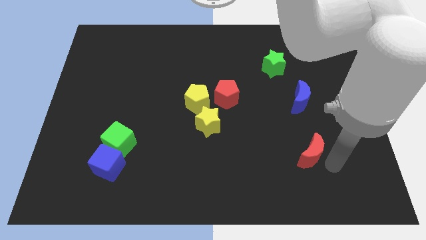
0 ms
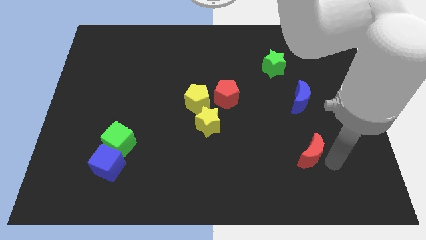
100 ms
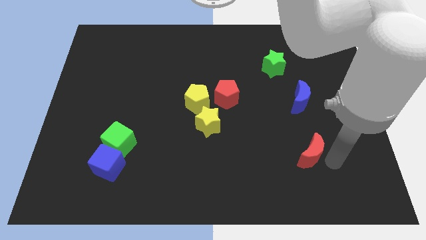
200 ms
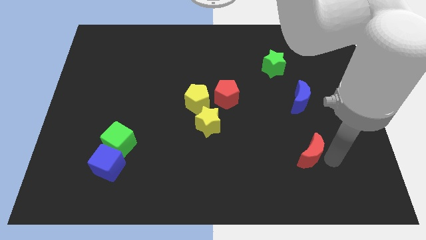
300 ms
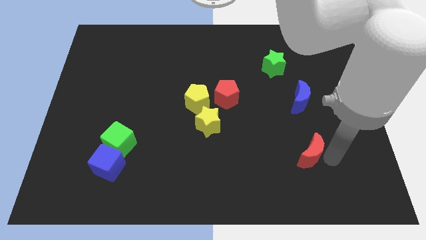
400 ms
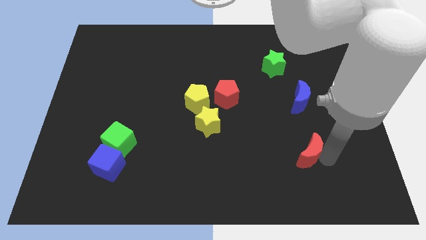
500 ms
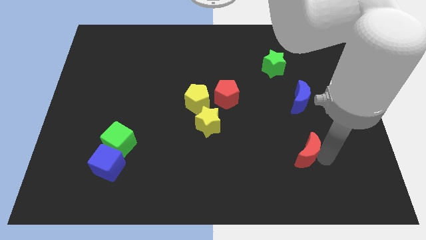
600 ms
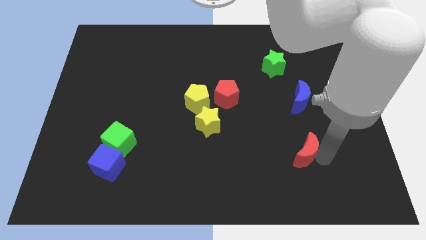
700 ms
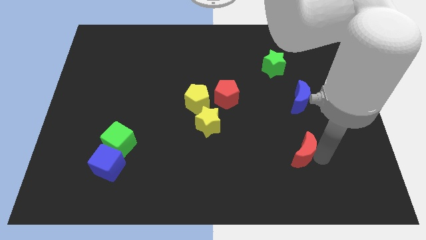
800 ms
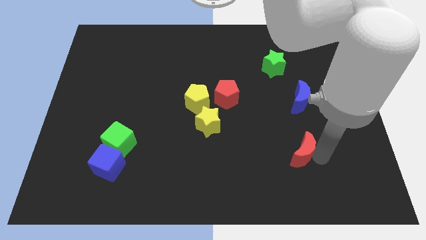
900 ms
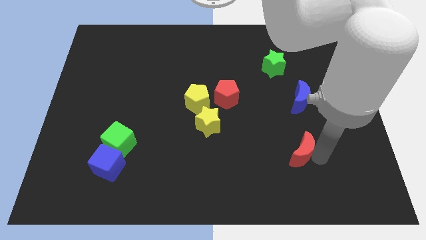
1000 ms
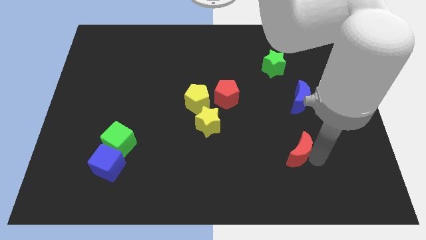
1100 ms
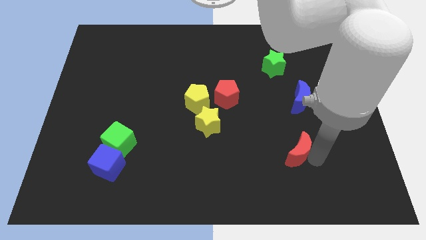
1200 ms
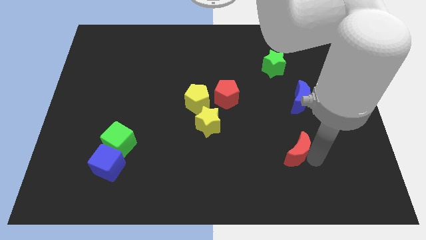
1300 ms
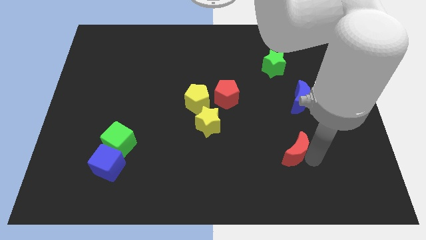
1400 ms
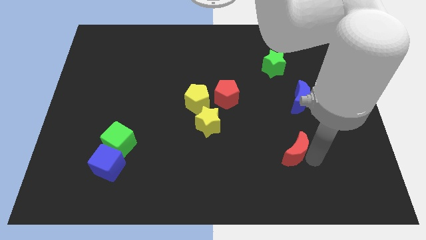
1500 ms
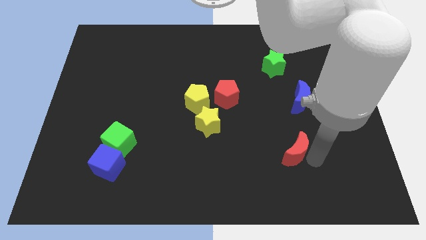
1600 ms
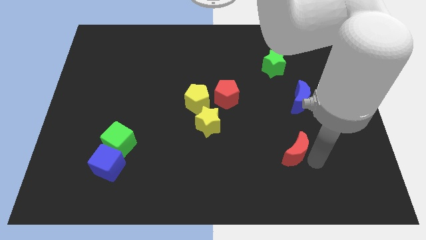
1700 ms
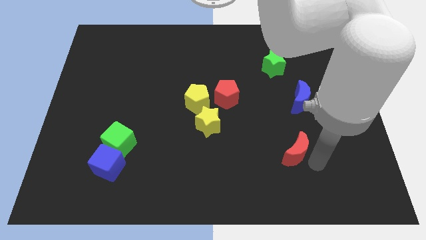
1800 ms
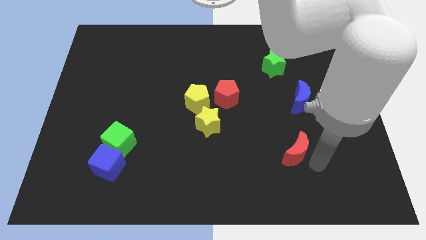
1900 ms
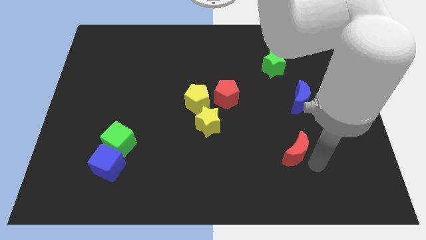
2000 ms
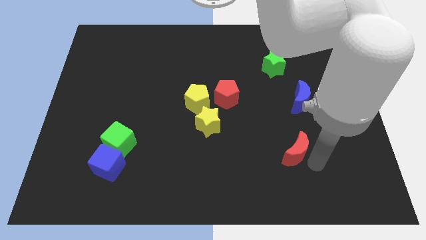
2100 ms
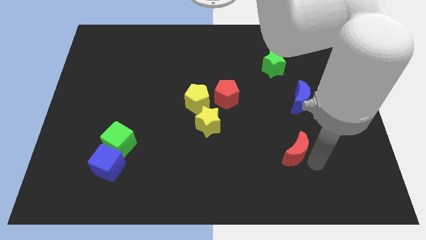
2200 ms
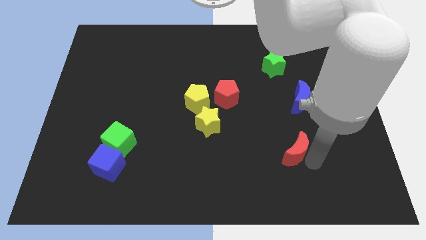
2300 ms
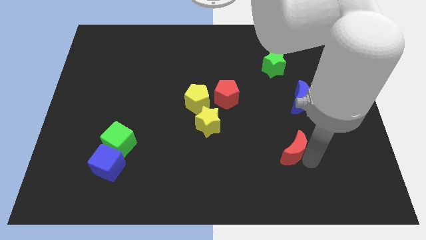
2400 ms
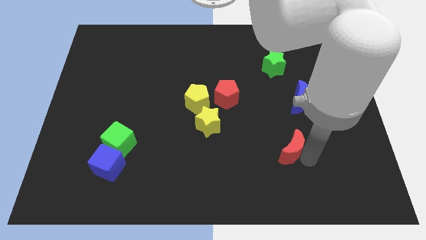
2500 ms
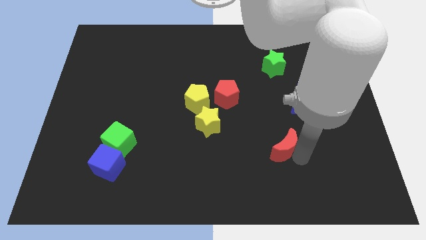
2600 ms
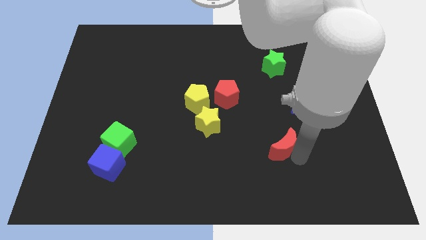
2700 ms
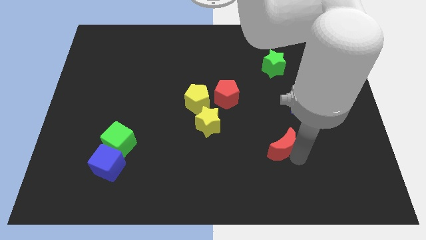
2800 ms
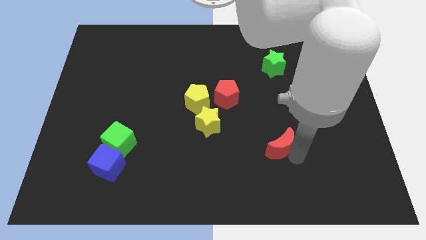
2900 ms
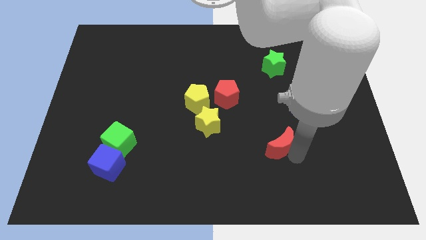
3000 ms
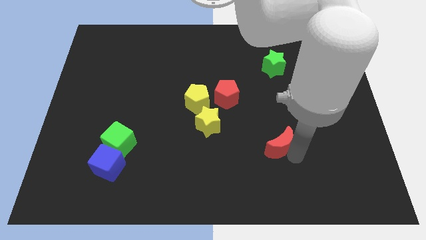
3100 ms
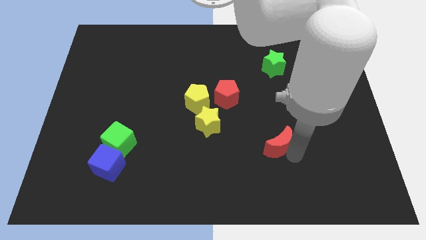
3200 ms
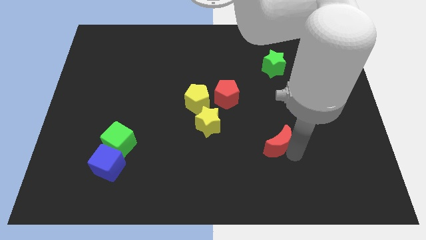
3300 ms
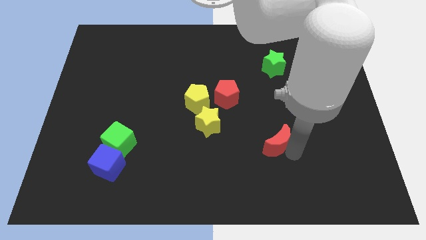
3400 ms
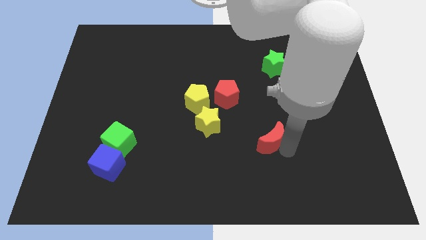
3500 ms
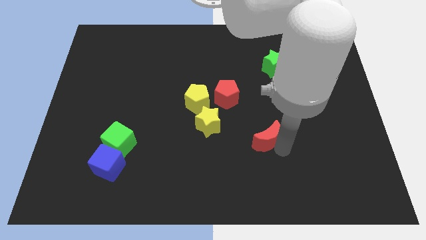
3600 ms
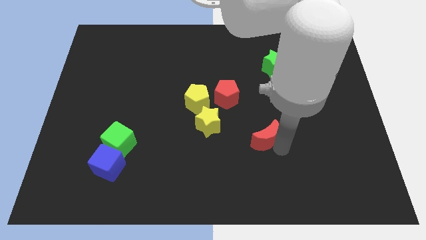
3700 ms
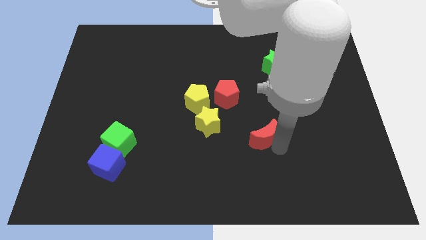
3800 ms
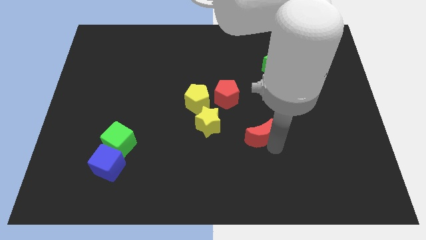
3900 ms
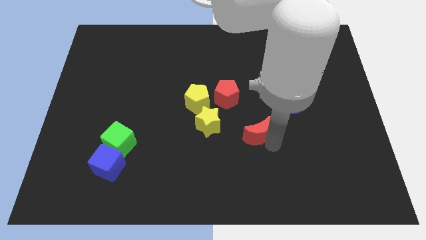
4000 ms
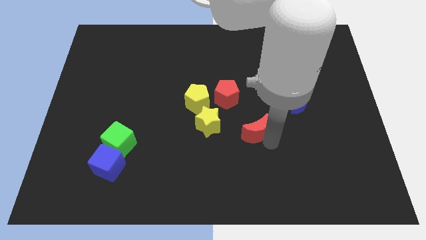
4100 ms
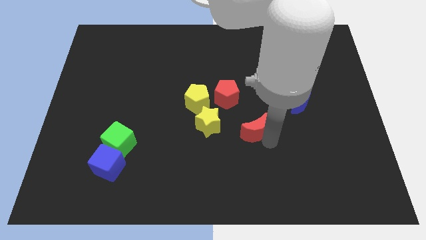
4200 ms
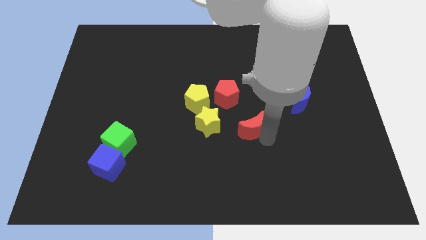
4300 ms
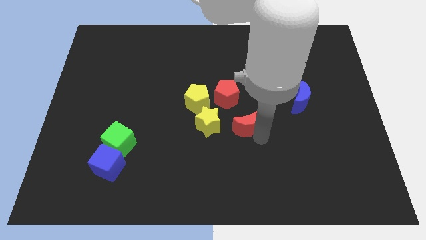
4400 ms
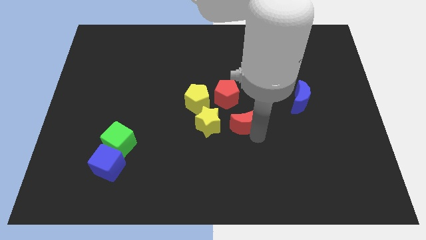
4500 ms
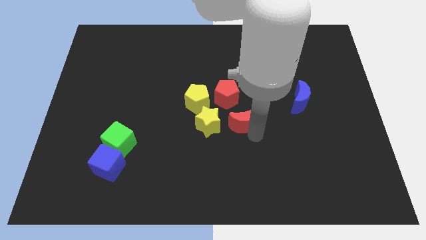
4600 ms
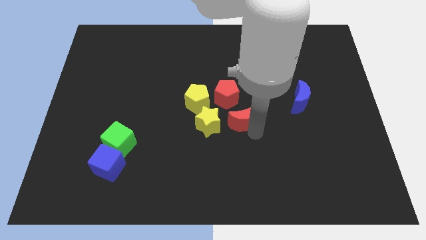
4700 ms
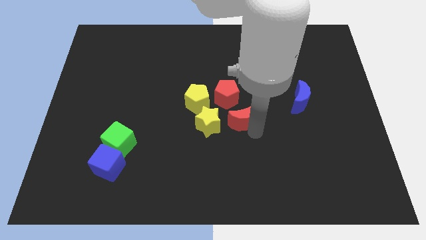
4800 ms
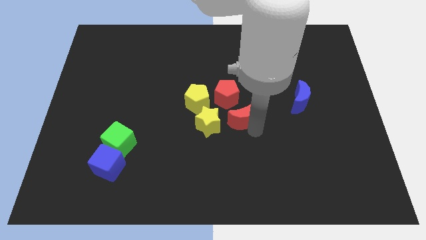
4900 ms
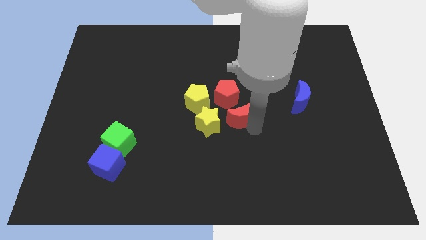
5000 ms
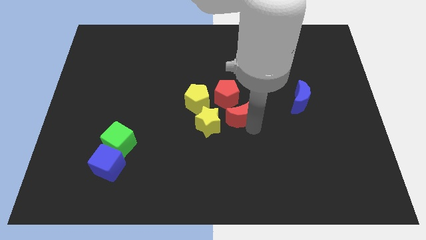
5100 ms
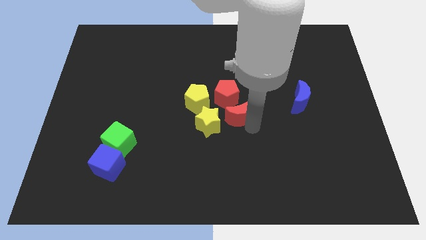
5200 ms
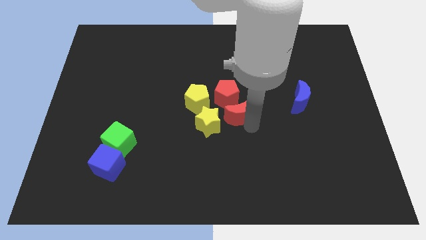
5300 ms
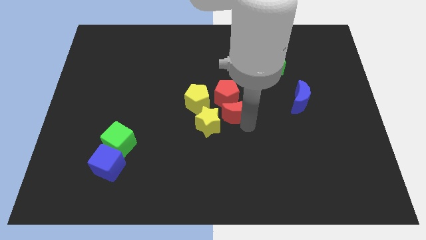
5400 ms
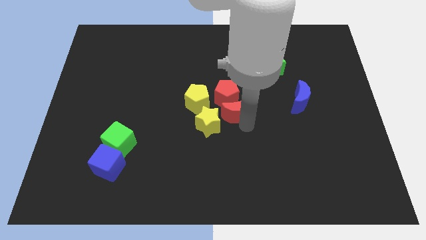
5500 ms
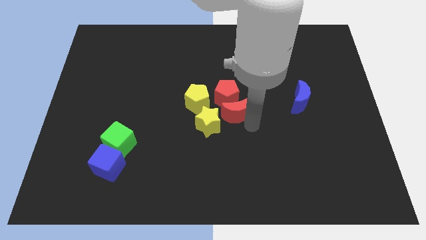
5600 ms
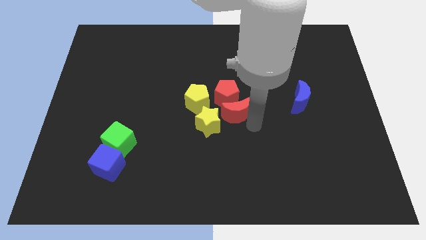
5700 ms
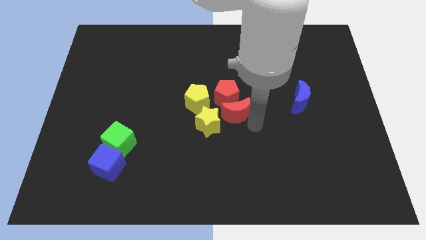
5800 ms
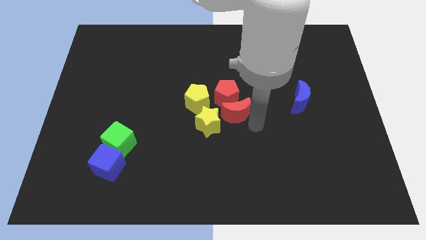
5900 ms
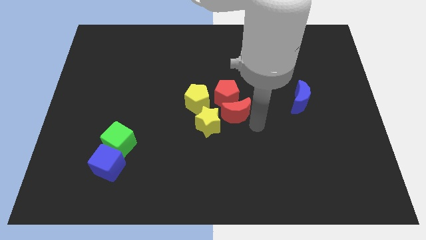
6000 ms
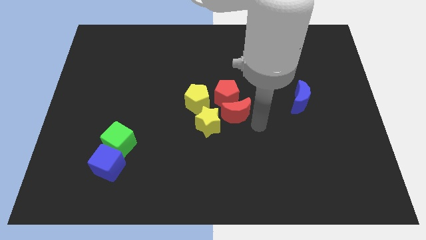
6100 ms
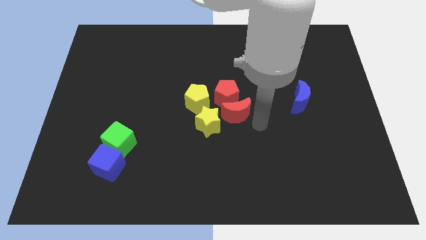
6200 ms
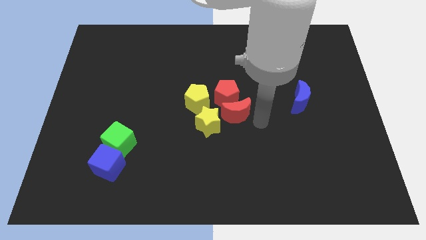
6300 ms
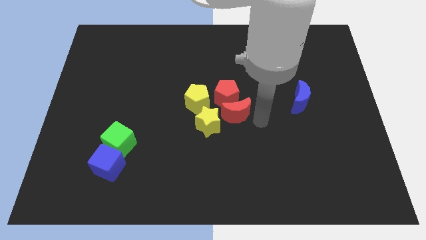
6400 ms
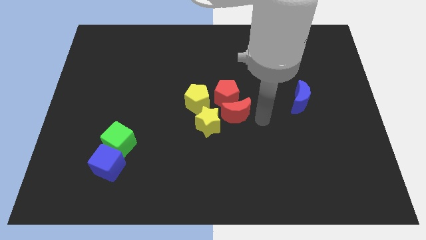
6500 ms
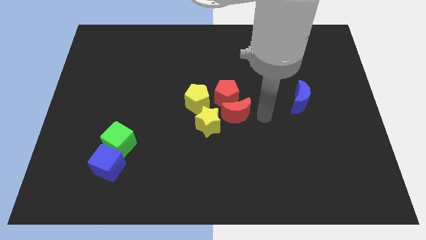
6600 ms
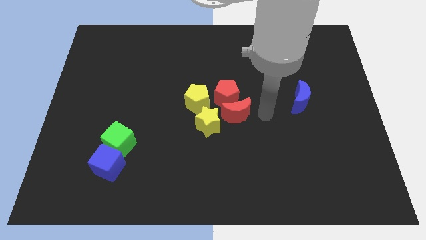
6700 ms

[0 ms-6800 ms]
push the red crescent to the bottom of the red pentagon

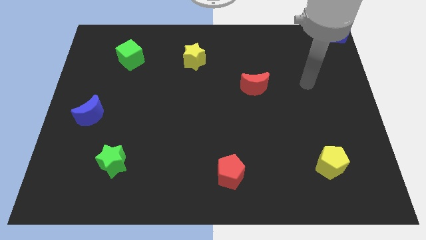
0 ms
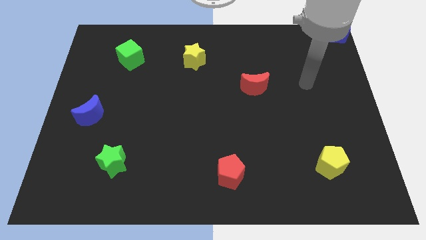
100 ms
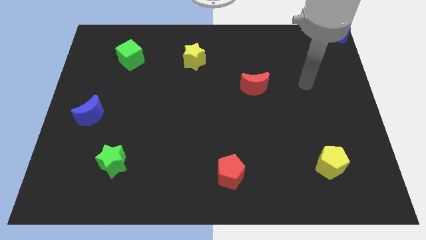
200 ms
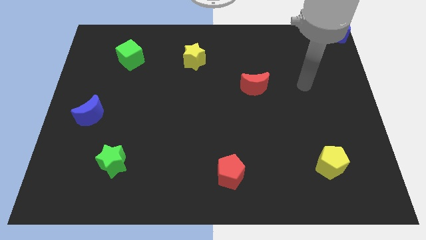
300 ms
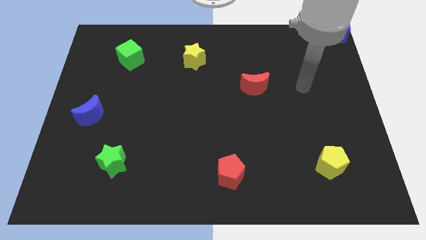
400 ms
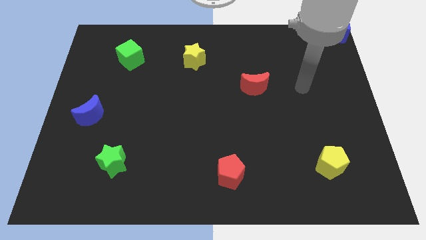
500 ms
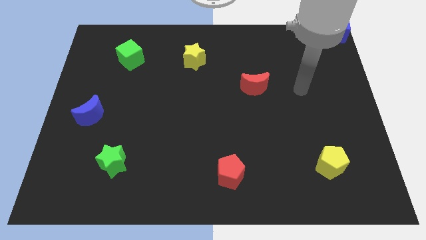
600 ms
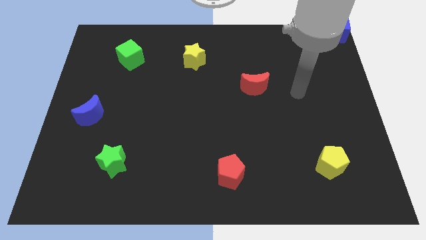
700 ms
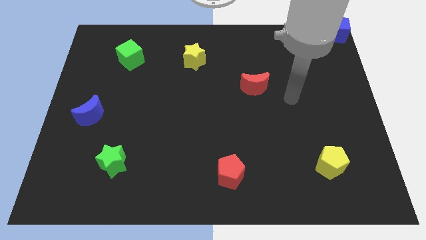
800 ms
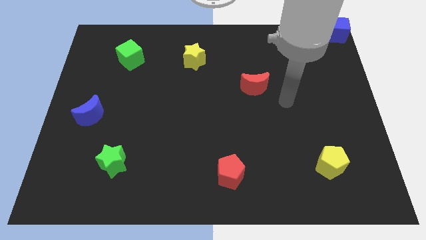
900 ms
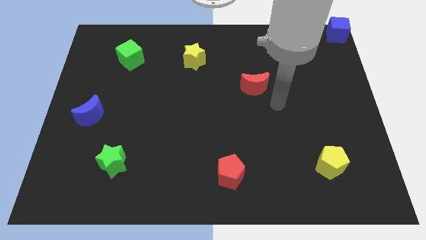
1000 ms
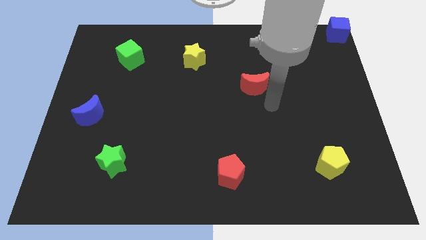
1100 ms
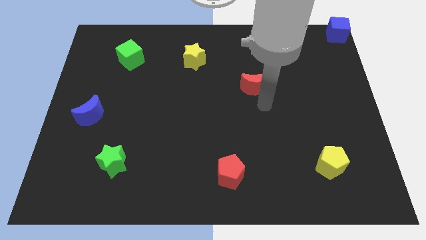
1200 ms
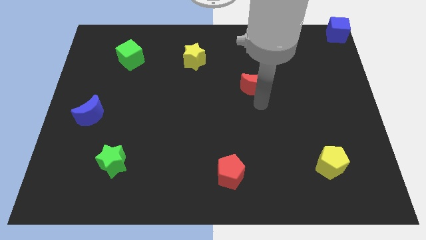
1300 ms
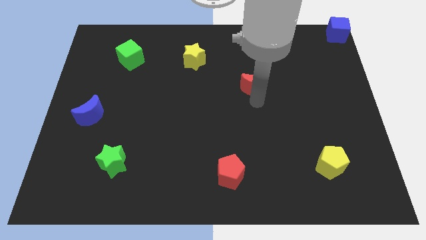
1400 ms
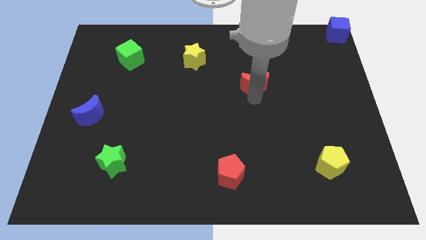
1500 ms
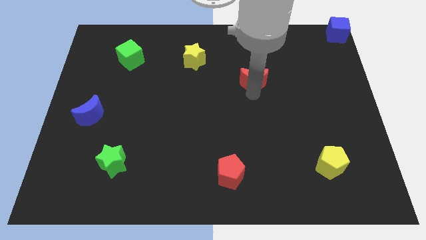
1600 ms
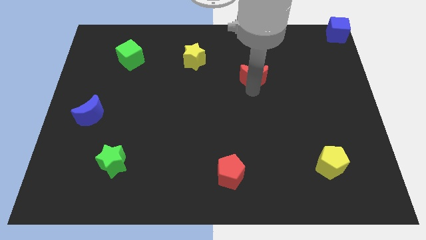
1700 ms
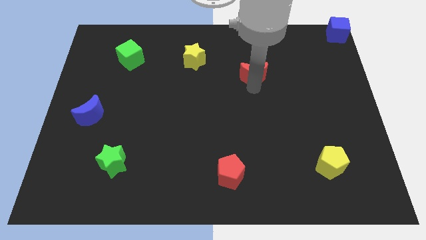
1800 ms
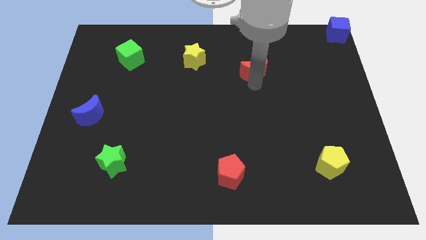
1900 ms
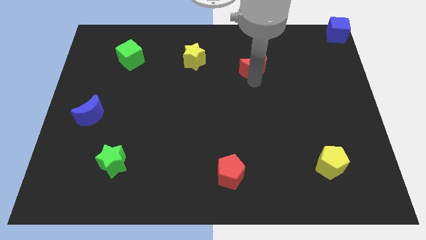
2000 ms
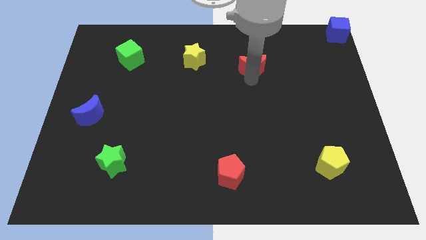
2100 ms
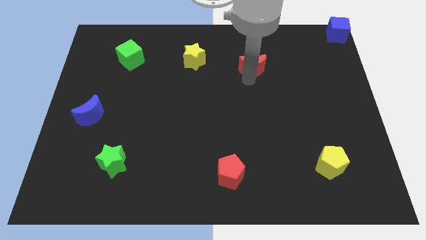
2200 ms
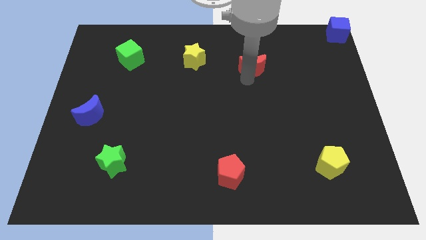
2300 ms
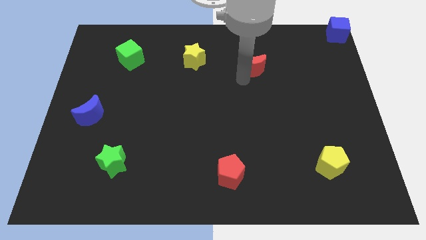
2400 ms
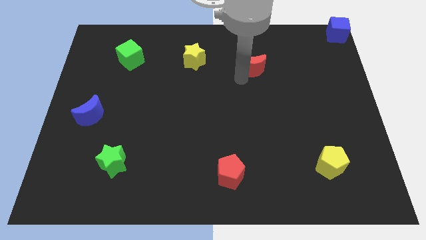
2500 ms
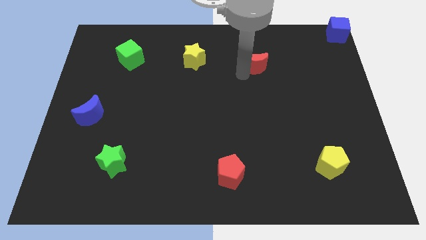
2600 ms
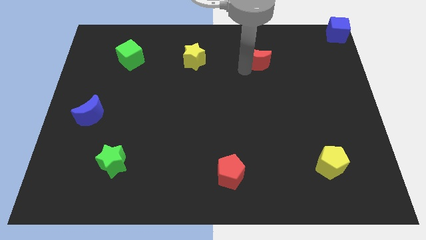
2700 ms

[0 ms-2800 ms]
push the red moon to the top side
